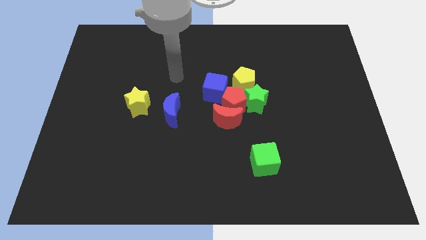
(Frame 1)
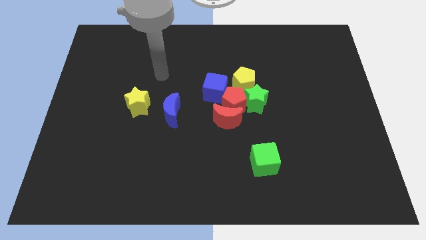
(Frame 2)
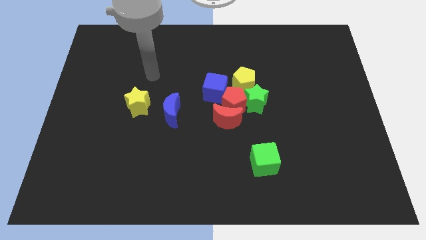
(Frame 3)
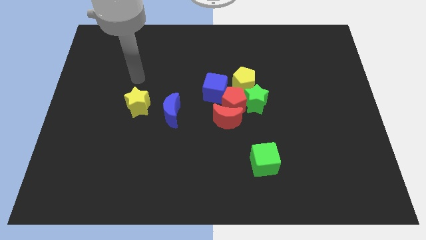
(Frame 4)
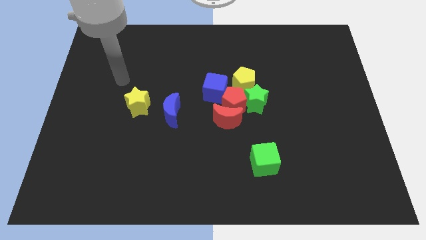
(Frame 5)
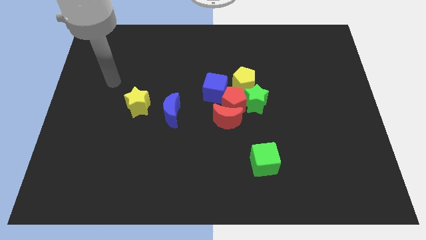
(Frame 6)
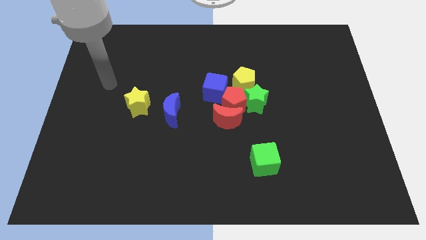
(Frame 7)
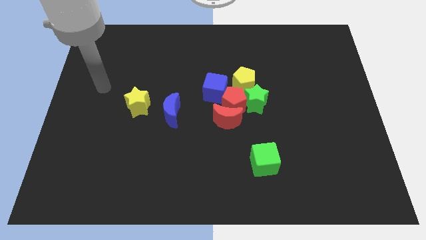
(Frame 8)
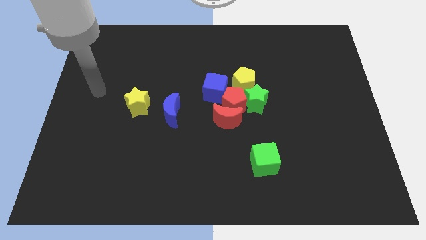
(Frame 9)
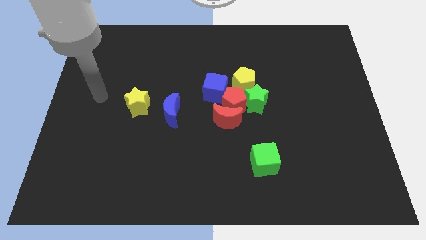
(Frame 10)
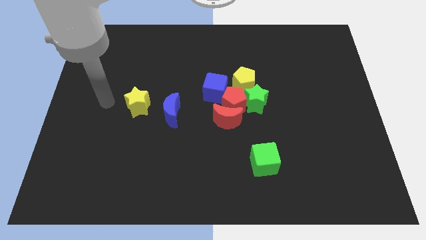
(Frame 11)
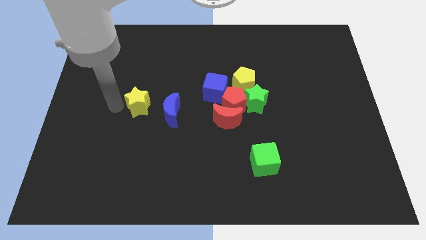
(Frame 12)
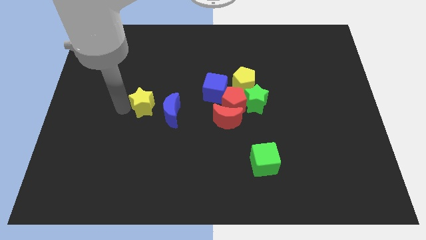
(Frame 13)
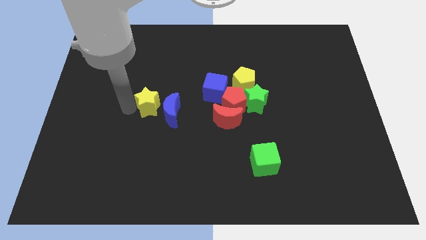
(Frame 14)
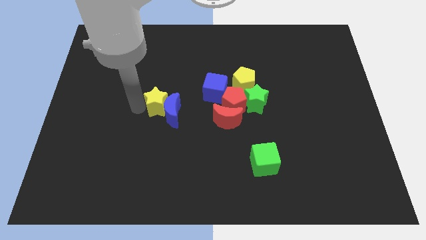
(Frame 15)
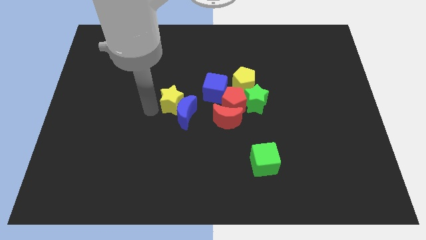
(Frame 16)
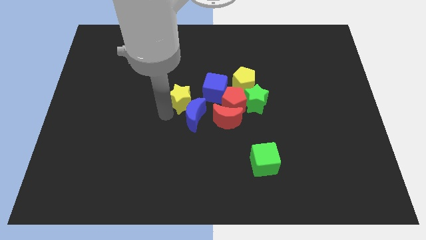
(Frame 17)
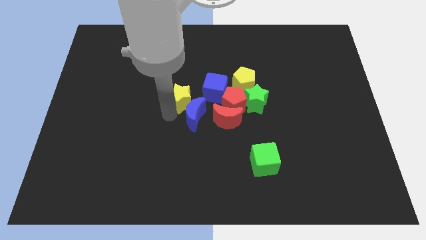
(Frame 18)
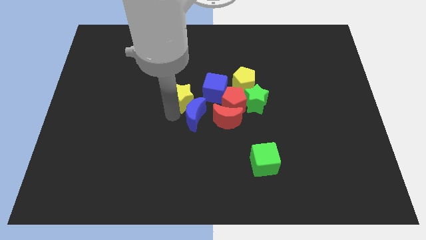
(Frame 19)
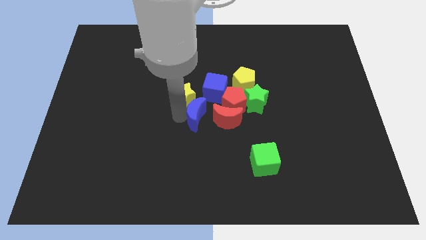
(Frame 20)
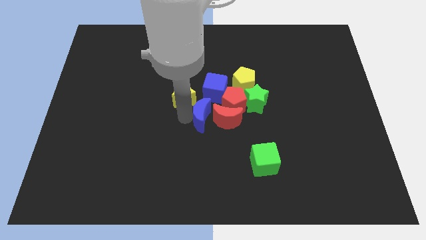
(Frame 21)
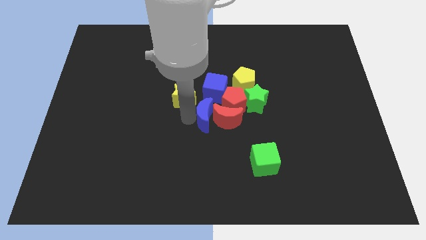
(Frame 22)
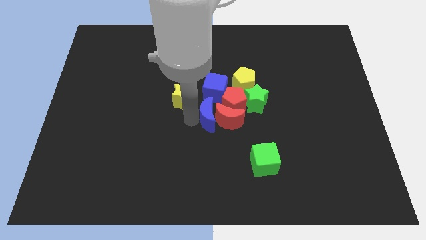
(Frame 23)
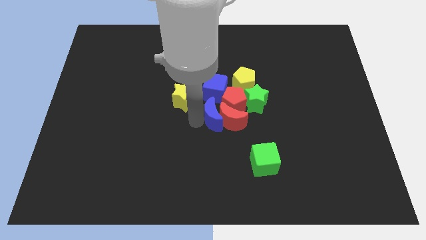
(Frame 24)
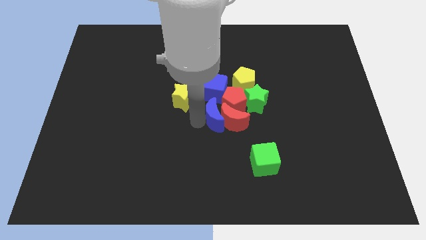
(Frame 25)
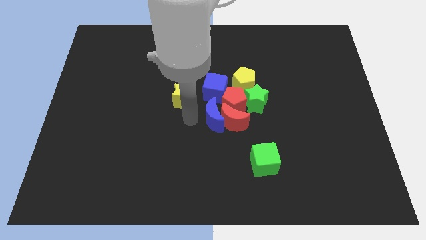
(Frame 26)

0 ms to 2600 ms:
push the blue moon into the left side of the red moon

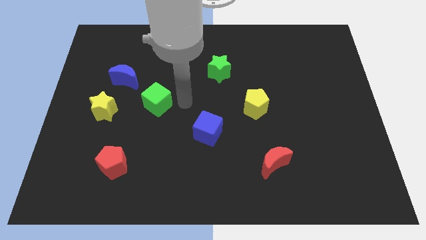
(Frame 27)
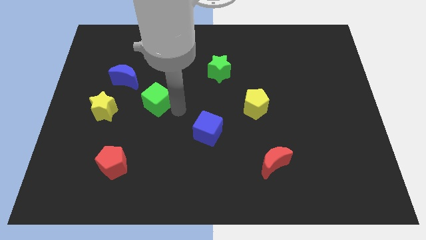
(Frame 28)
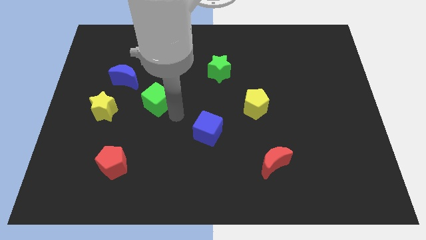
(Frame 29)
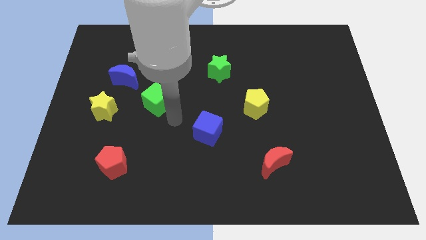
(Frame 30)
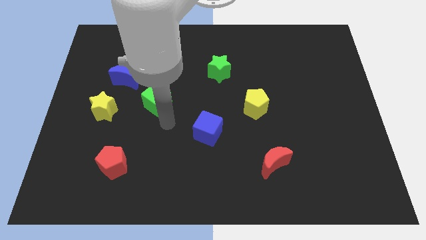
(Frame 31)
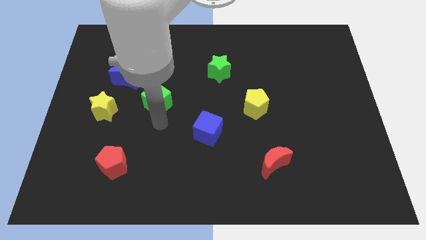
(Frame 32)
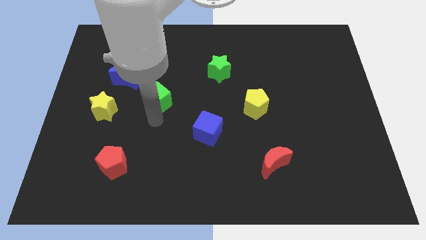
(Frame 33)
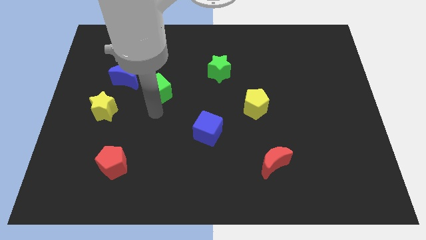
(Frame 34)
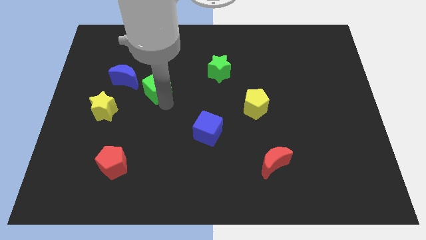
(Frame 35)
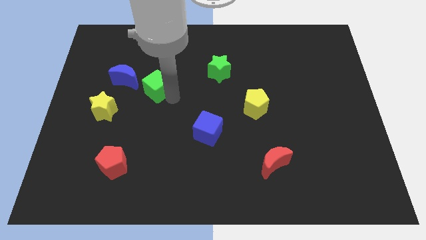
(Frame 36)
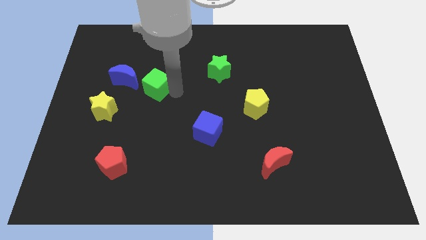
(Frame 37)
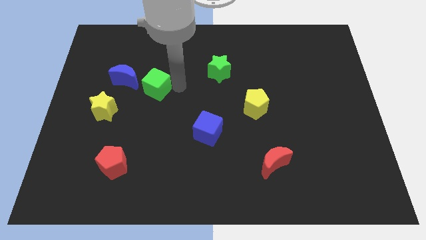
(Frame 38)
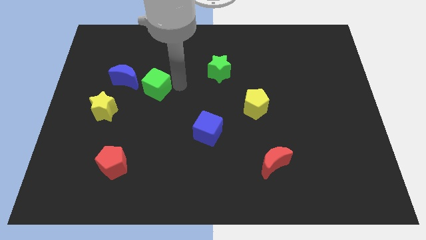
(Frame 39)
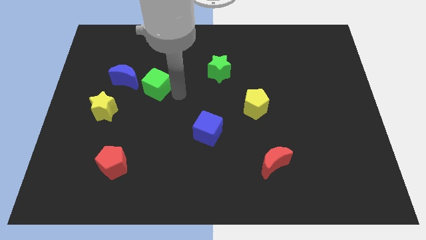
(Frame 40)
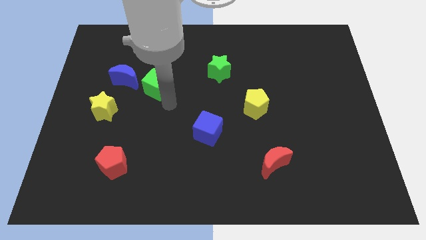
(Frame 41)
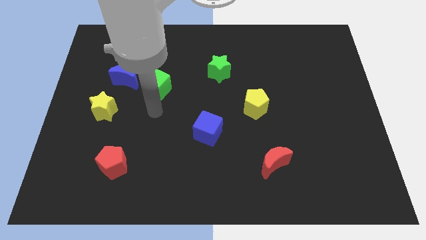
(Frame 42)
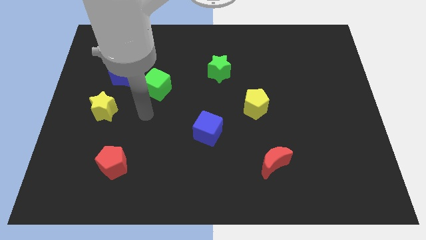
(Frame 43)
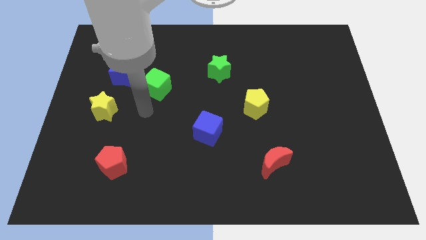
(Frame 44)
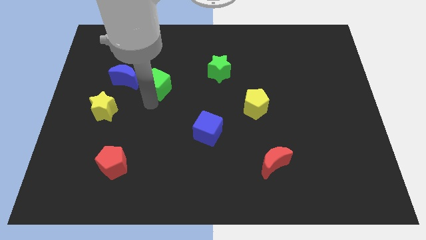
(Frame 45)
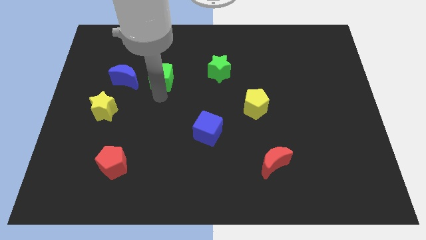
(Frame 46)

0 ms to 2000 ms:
place the green cube to the right side of the blue crescent

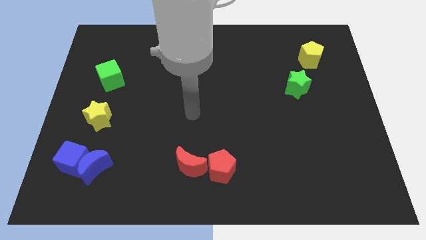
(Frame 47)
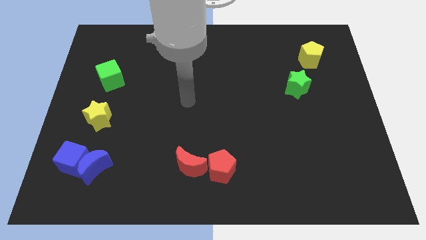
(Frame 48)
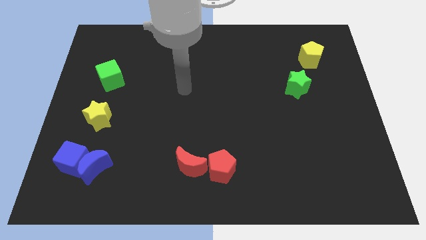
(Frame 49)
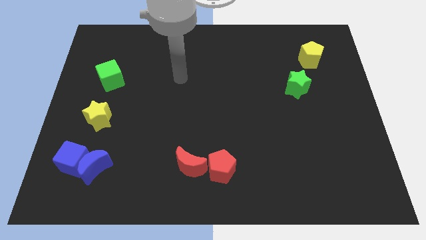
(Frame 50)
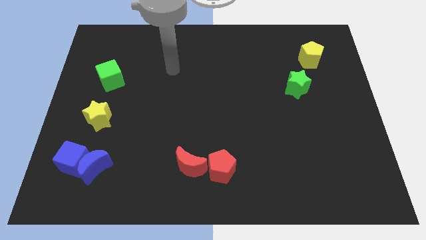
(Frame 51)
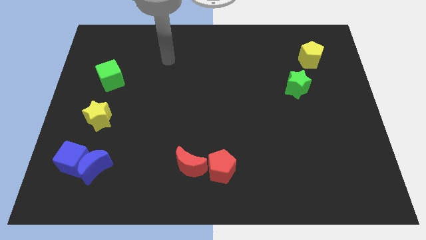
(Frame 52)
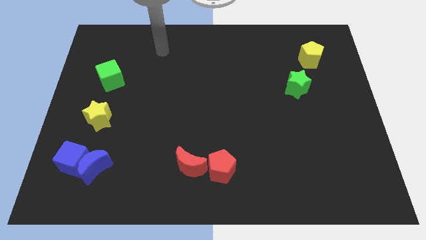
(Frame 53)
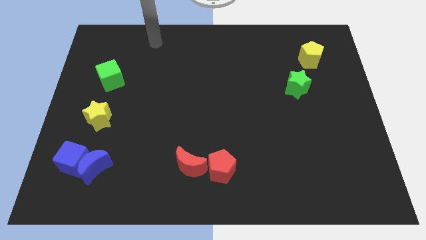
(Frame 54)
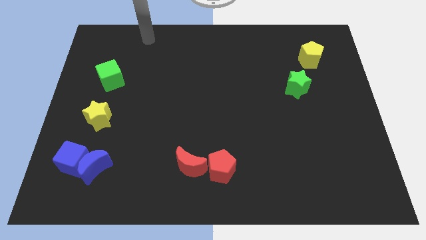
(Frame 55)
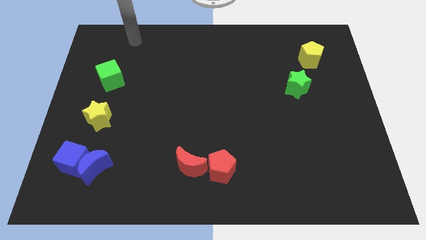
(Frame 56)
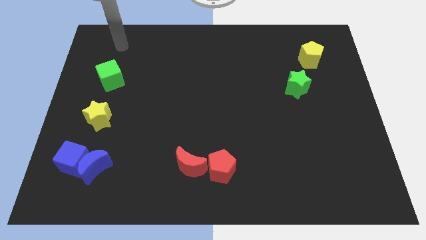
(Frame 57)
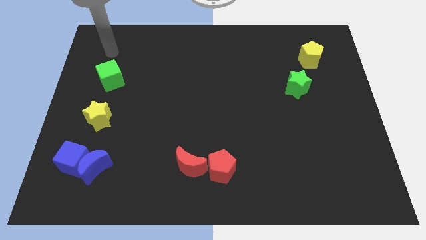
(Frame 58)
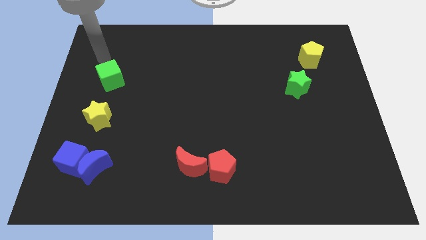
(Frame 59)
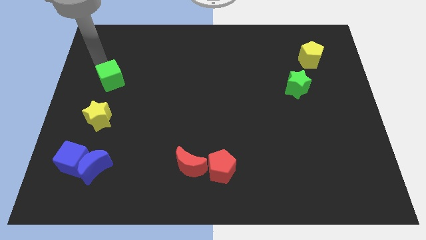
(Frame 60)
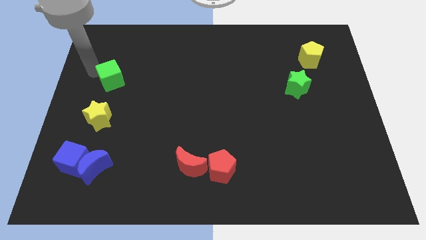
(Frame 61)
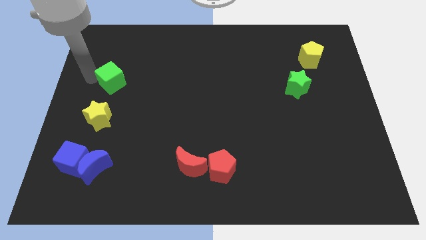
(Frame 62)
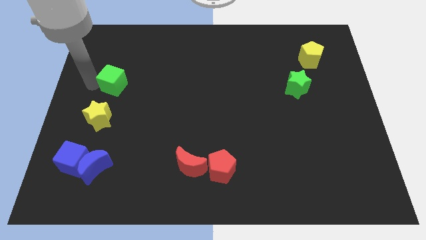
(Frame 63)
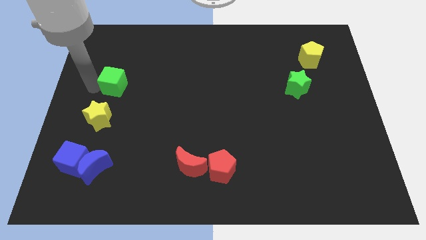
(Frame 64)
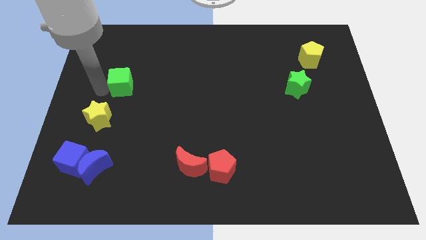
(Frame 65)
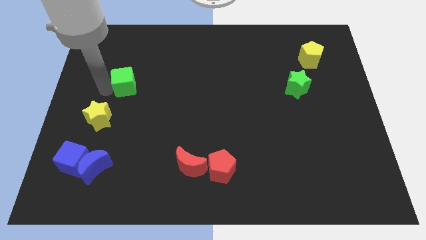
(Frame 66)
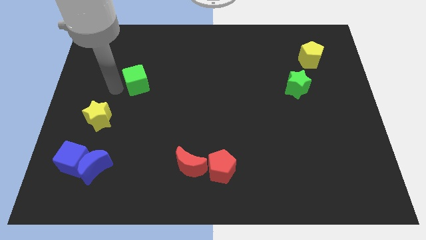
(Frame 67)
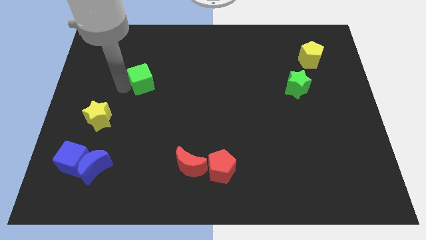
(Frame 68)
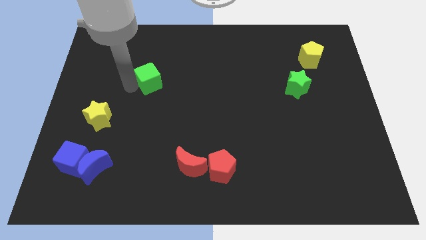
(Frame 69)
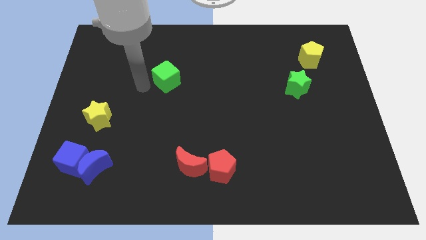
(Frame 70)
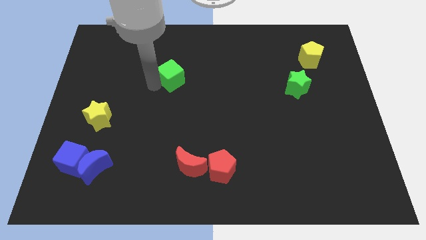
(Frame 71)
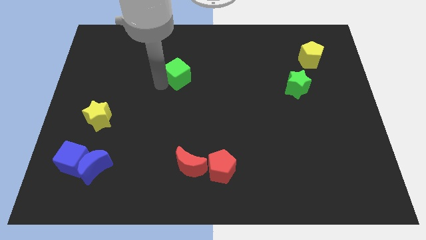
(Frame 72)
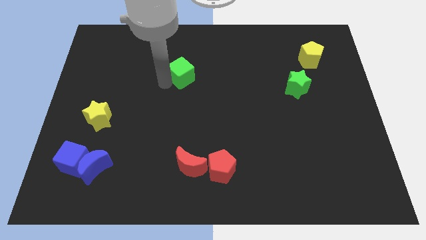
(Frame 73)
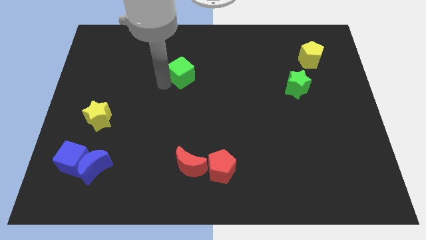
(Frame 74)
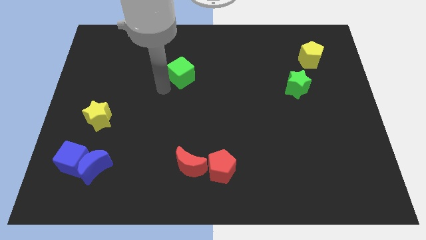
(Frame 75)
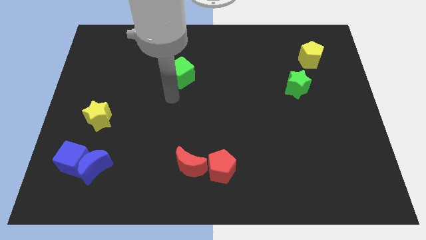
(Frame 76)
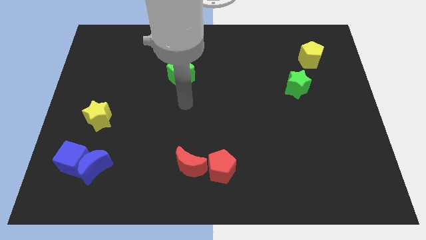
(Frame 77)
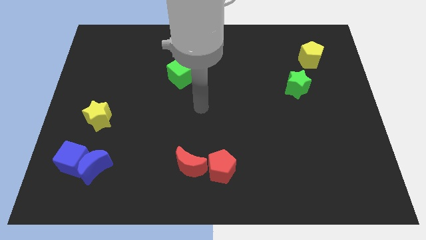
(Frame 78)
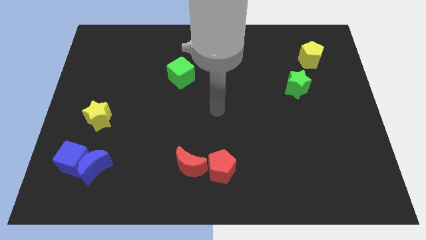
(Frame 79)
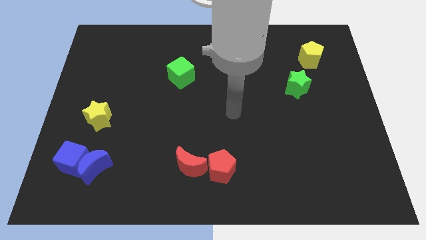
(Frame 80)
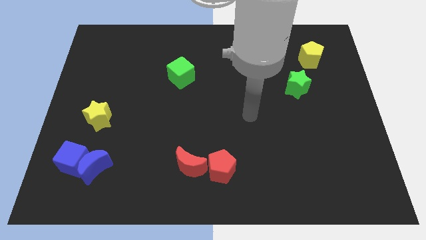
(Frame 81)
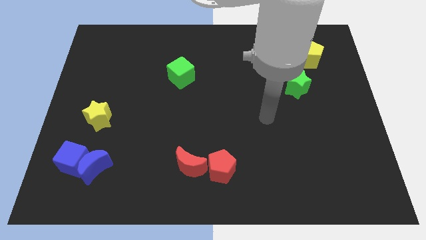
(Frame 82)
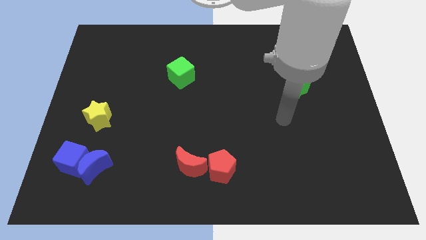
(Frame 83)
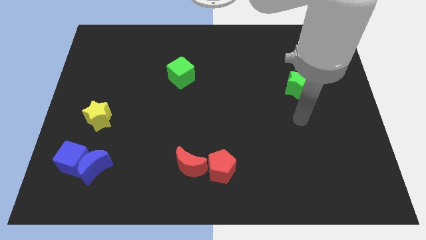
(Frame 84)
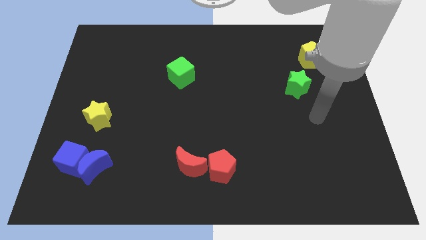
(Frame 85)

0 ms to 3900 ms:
move the green cube towards the right

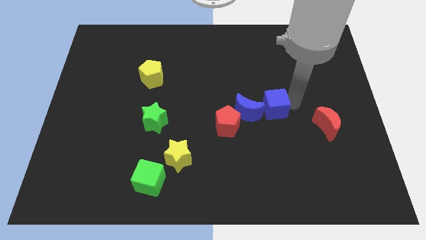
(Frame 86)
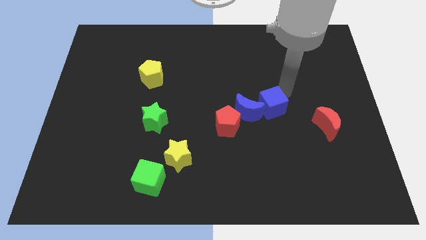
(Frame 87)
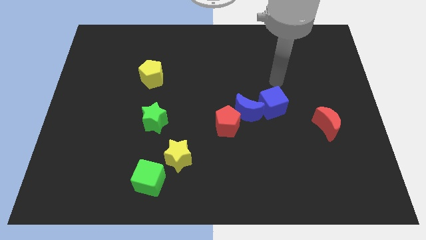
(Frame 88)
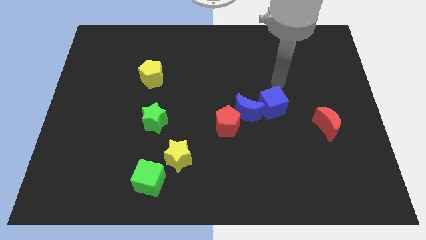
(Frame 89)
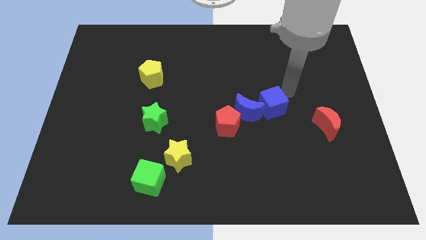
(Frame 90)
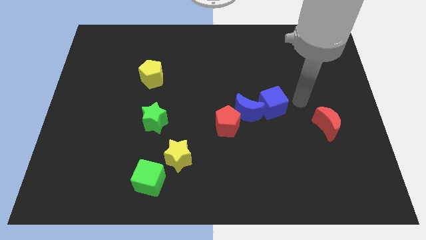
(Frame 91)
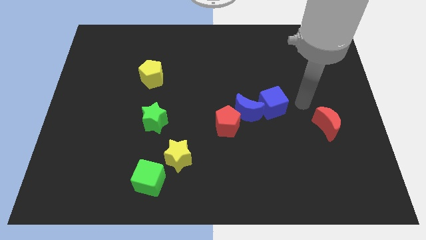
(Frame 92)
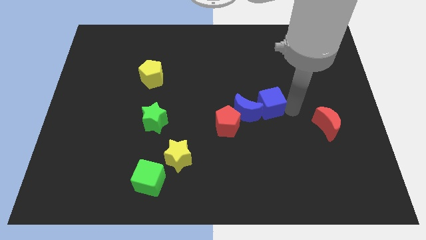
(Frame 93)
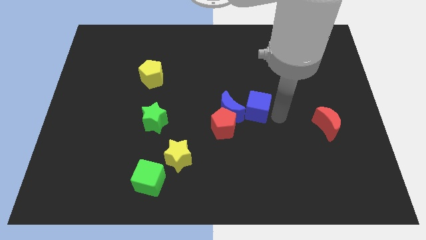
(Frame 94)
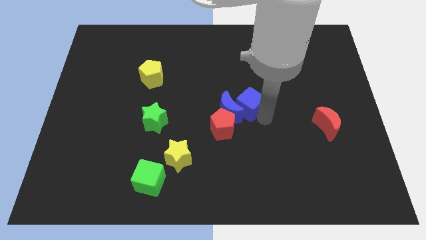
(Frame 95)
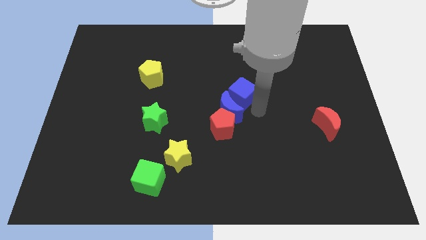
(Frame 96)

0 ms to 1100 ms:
push blue cube into blue moon
